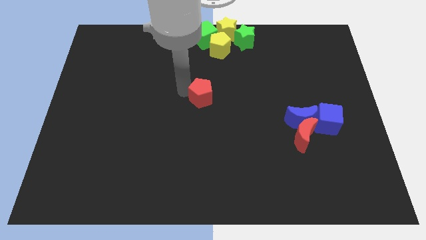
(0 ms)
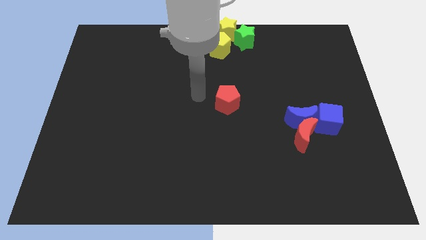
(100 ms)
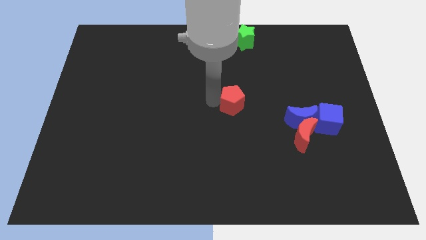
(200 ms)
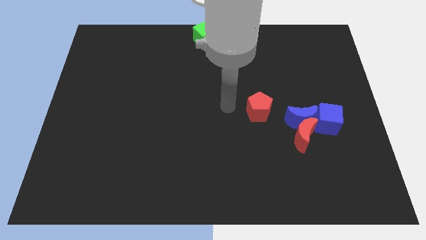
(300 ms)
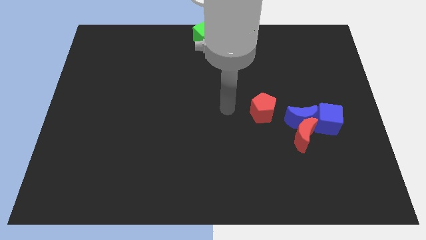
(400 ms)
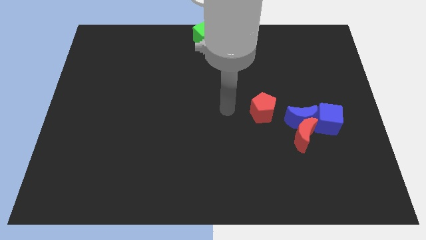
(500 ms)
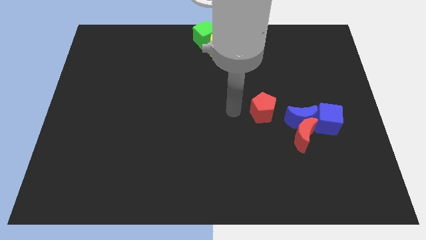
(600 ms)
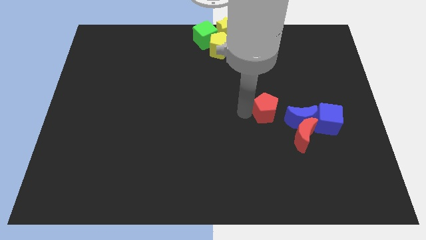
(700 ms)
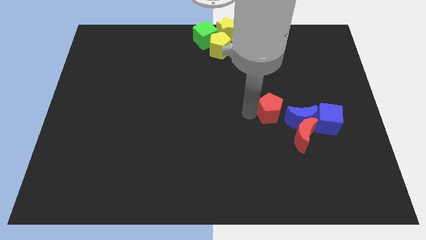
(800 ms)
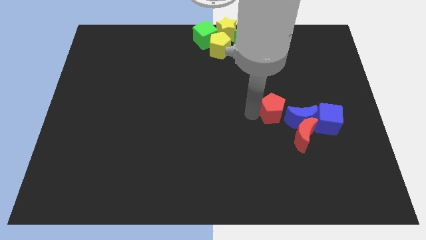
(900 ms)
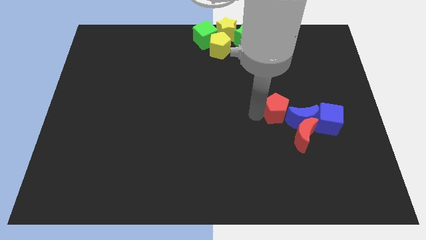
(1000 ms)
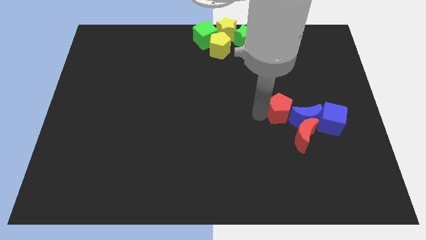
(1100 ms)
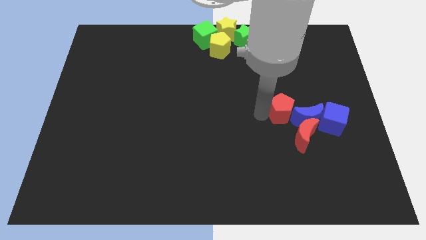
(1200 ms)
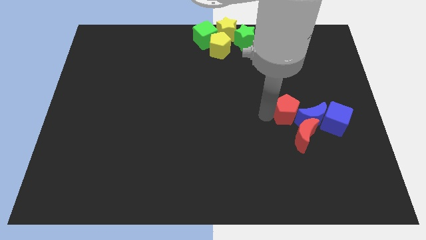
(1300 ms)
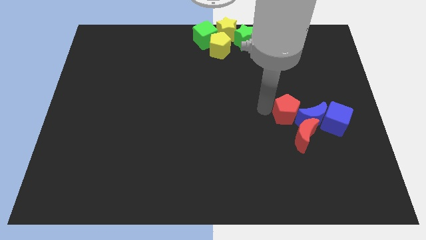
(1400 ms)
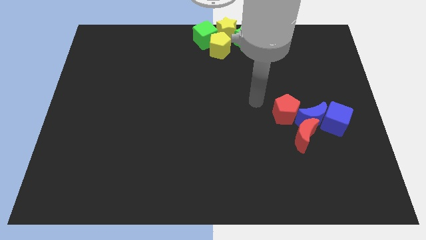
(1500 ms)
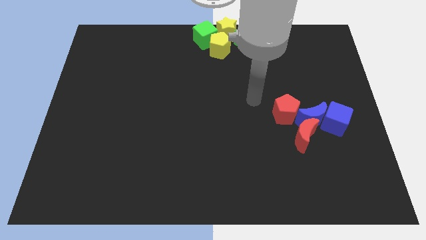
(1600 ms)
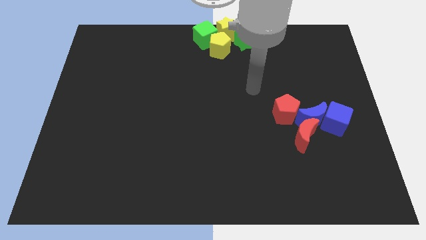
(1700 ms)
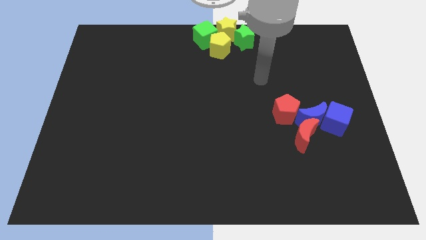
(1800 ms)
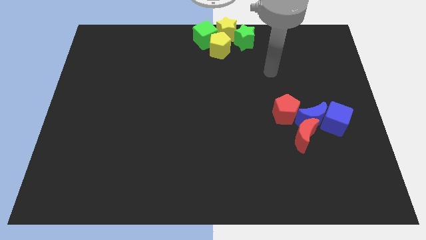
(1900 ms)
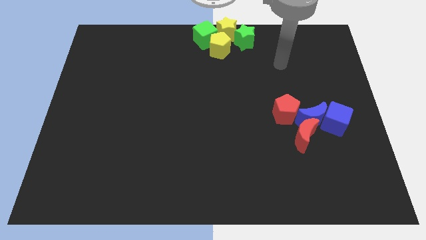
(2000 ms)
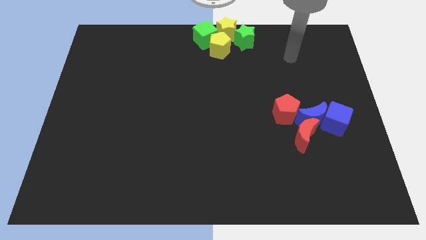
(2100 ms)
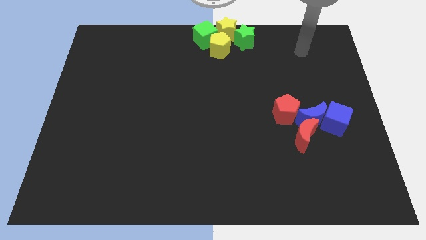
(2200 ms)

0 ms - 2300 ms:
push red pentagon into the blue moon

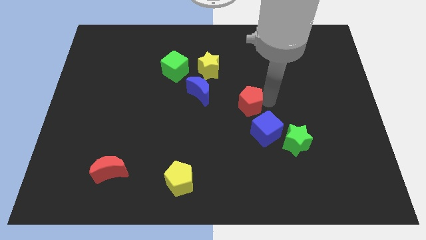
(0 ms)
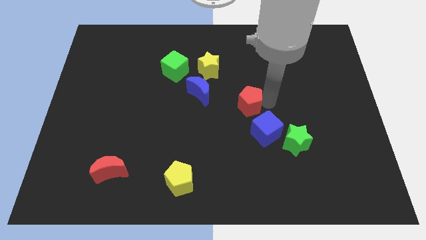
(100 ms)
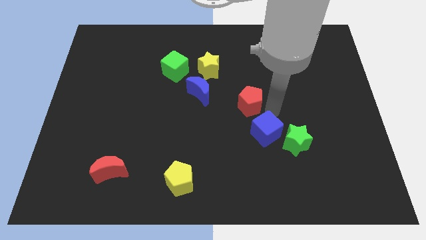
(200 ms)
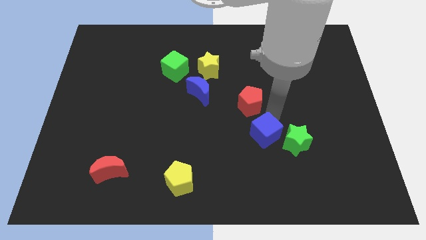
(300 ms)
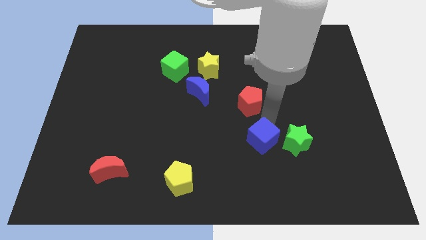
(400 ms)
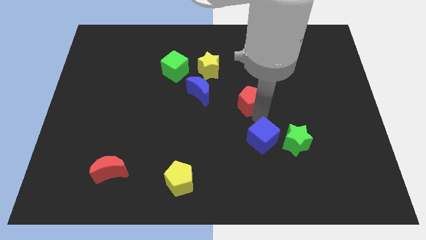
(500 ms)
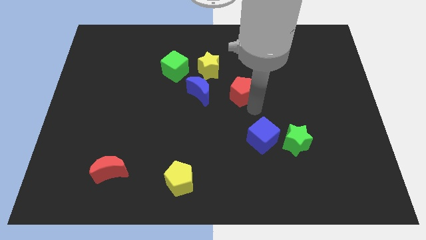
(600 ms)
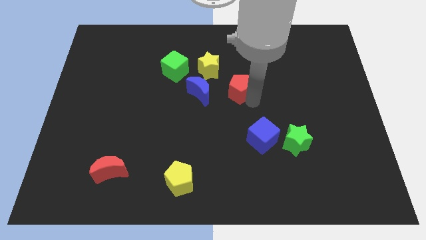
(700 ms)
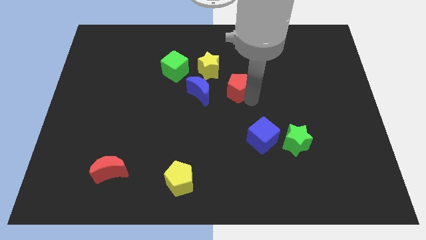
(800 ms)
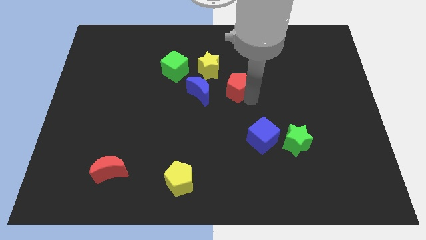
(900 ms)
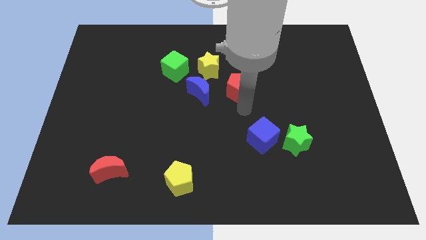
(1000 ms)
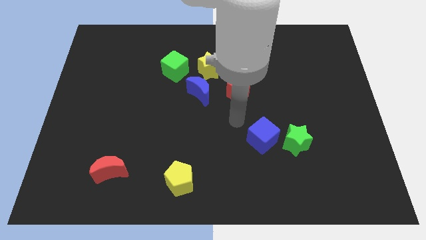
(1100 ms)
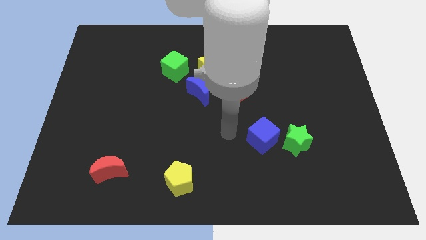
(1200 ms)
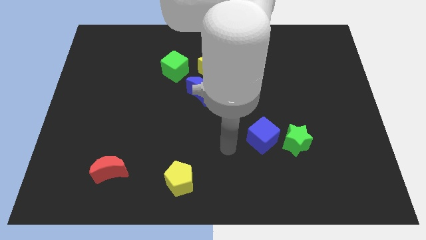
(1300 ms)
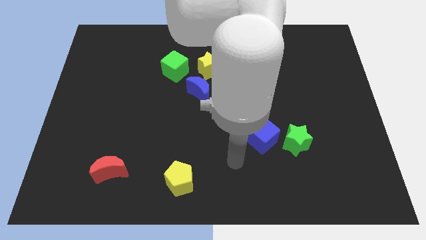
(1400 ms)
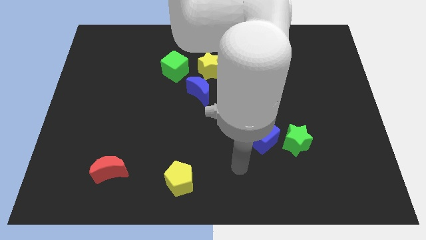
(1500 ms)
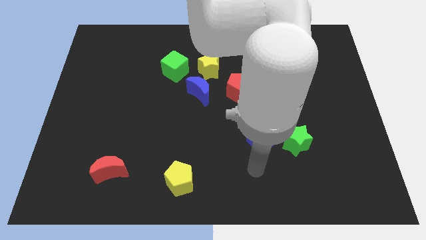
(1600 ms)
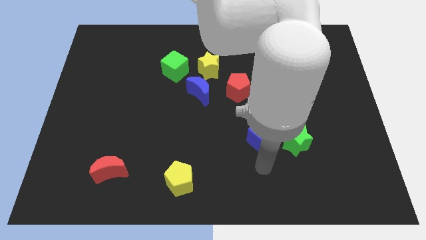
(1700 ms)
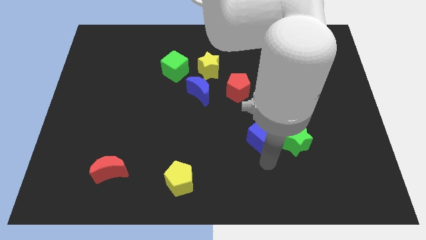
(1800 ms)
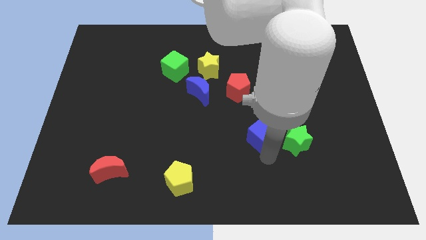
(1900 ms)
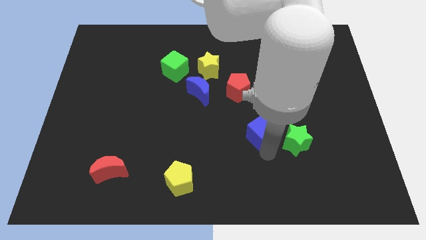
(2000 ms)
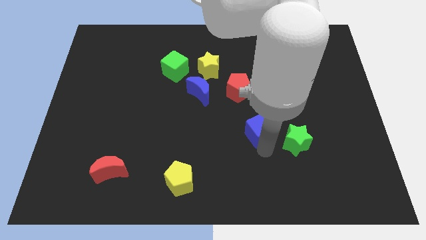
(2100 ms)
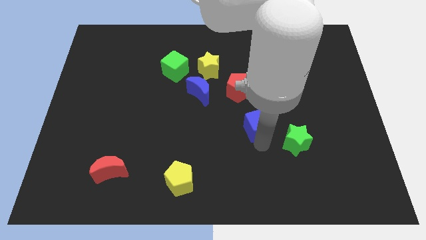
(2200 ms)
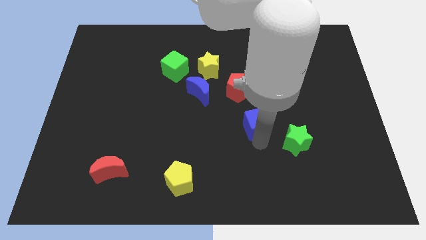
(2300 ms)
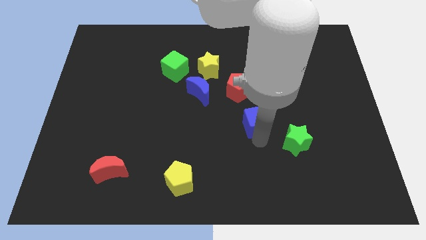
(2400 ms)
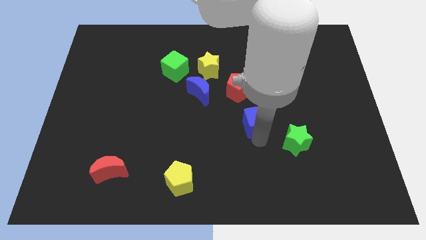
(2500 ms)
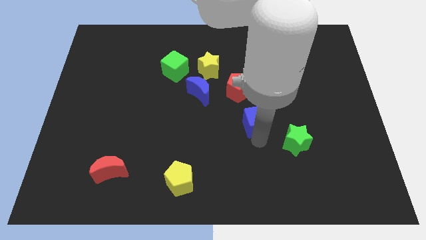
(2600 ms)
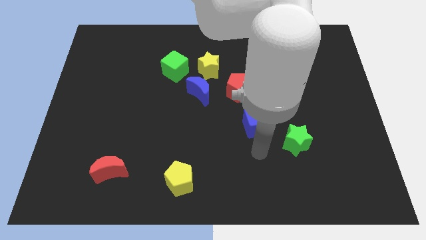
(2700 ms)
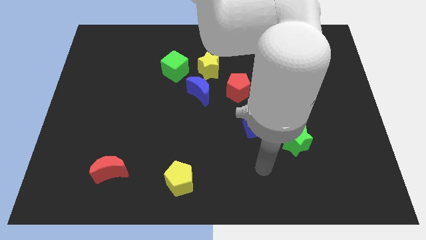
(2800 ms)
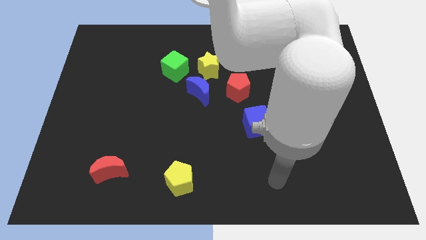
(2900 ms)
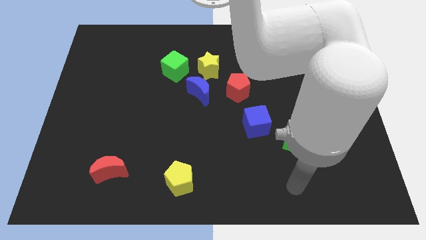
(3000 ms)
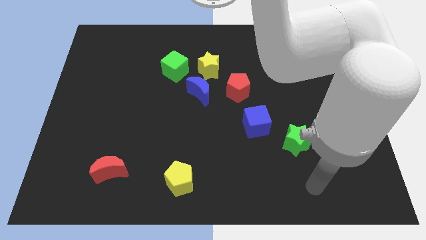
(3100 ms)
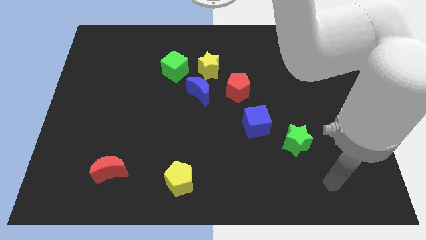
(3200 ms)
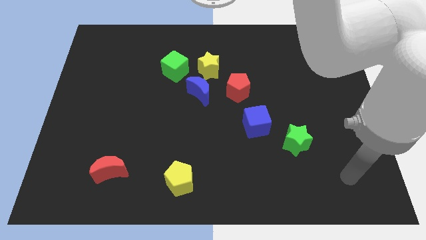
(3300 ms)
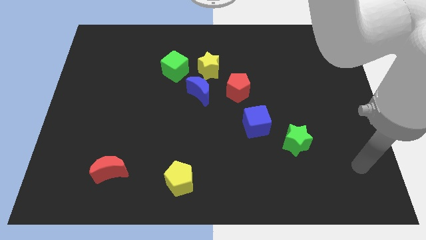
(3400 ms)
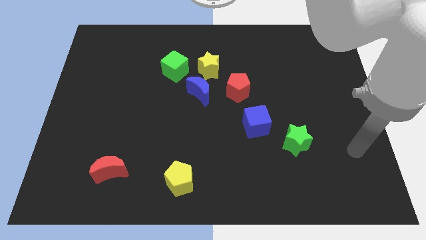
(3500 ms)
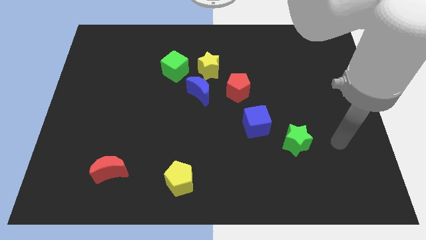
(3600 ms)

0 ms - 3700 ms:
move the blue cube to the bottom right side of the red pentagon

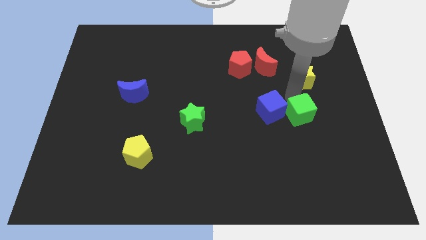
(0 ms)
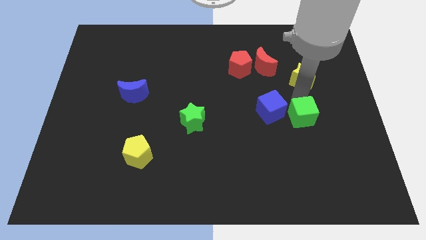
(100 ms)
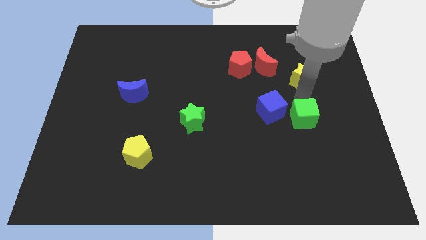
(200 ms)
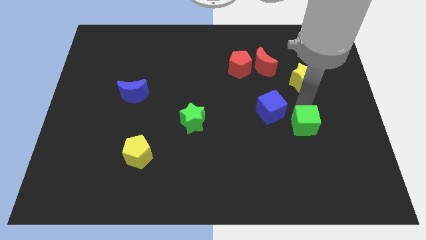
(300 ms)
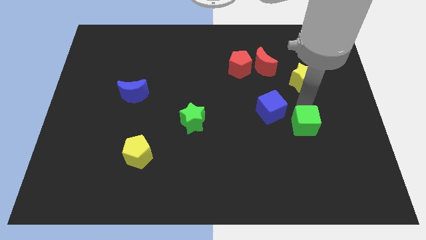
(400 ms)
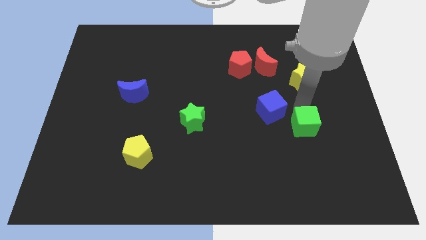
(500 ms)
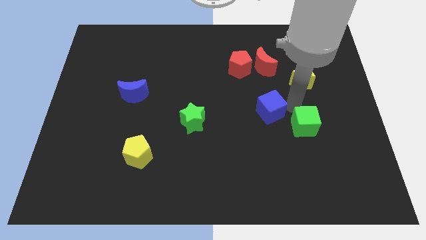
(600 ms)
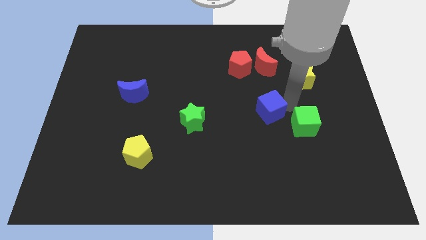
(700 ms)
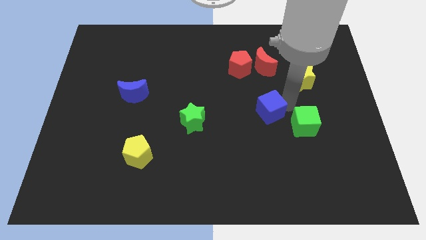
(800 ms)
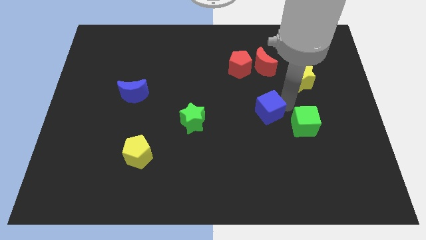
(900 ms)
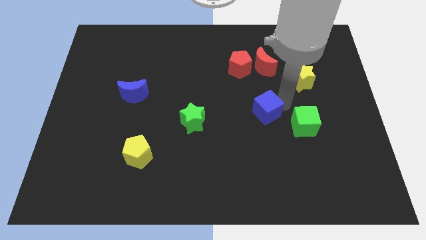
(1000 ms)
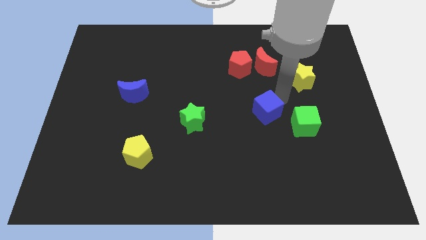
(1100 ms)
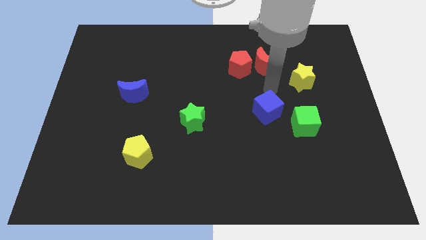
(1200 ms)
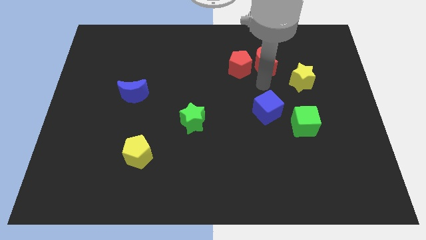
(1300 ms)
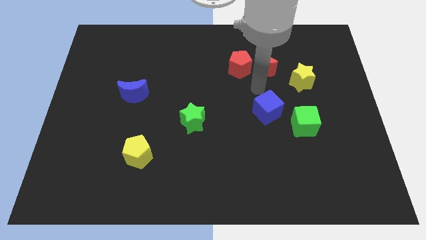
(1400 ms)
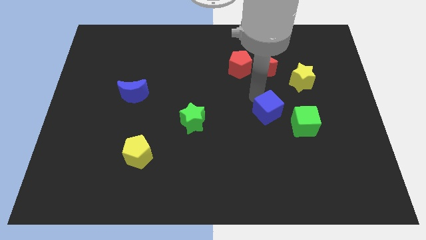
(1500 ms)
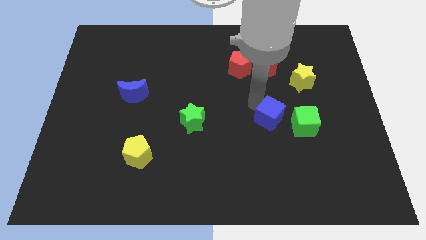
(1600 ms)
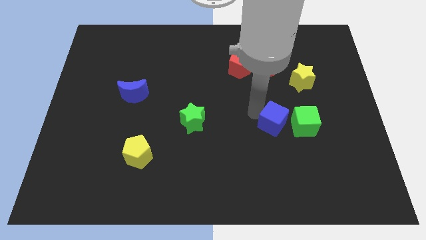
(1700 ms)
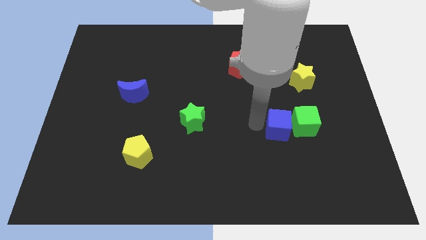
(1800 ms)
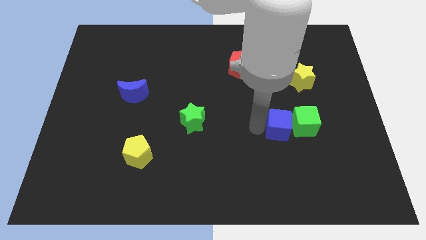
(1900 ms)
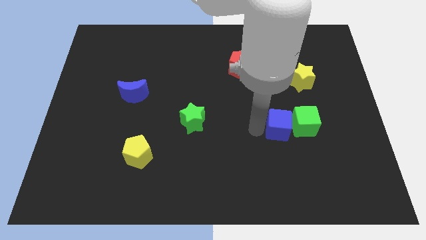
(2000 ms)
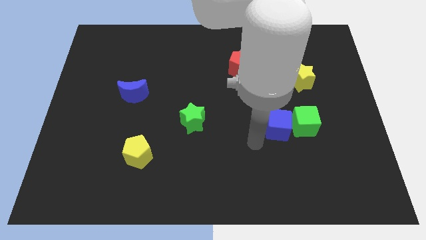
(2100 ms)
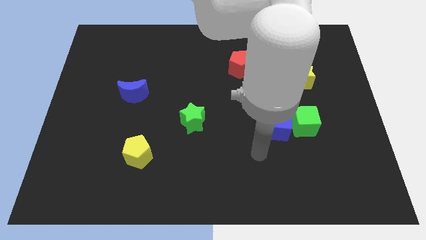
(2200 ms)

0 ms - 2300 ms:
move blue cube slightly down

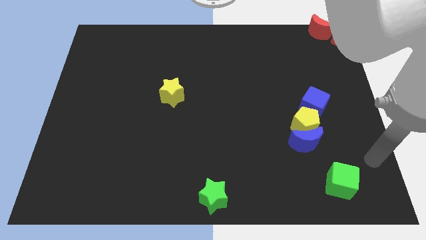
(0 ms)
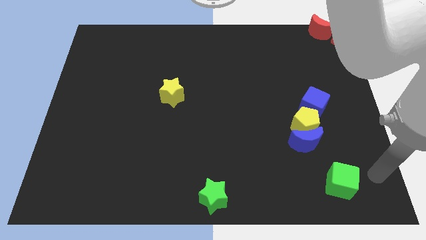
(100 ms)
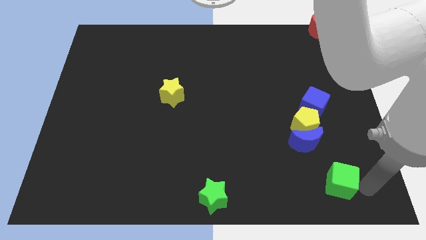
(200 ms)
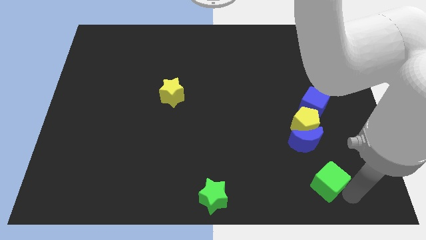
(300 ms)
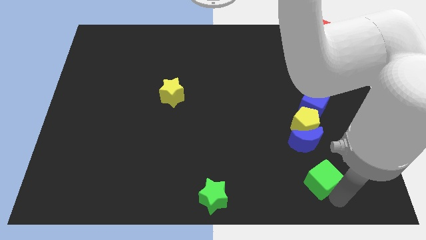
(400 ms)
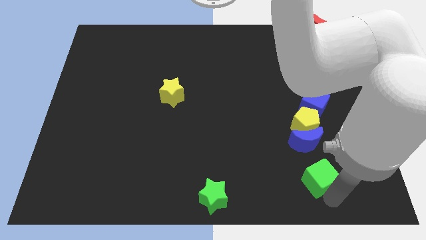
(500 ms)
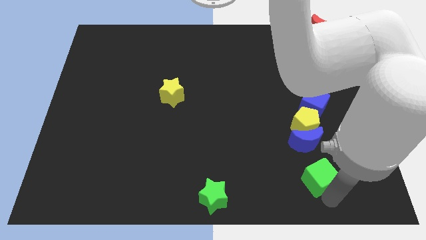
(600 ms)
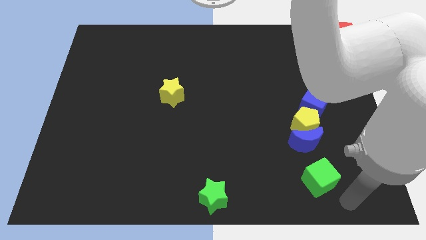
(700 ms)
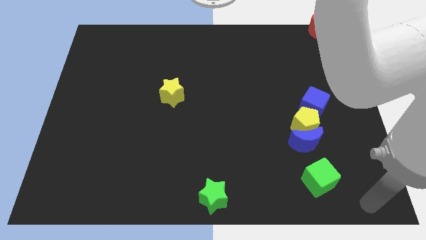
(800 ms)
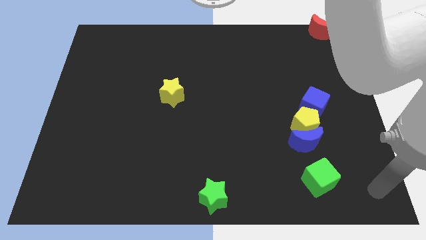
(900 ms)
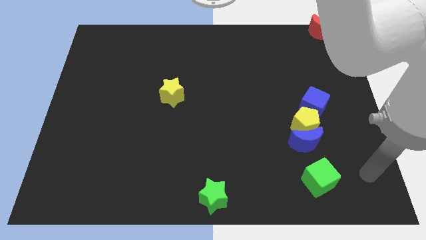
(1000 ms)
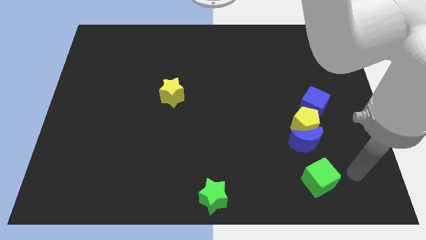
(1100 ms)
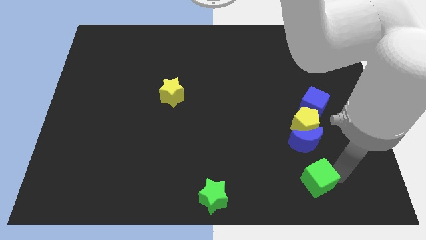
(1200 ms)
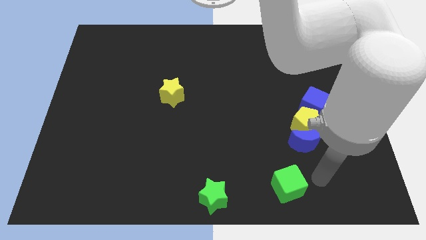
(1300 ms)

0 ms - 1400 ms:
move the green cube below the blue moon
